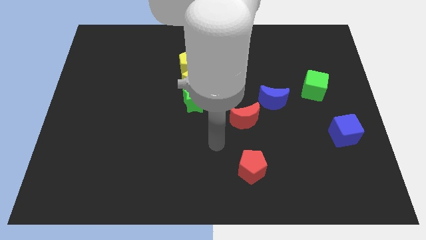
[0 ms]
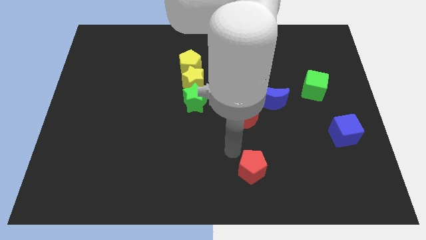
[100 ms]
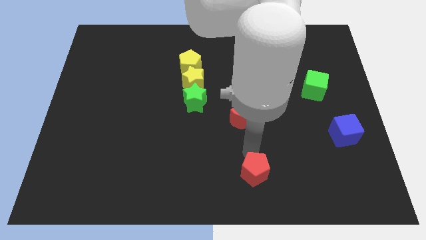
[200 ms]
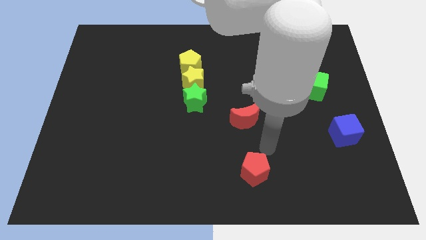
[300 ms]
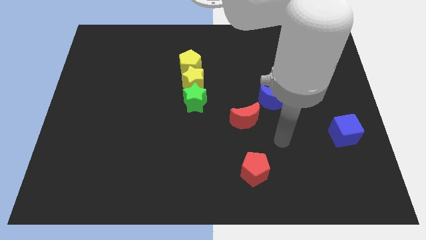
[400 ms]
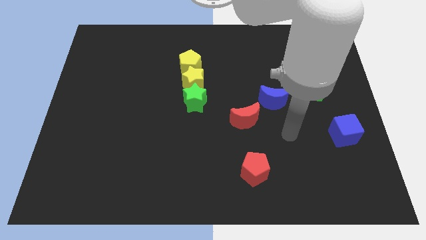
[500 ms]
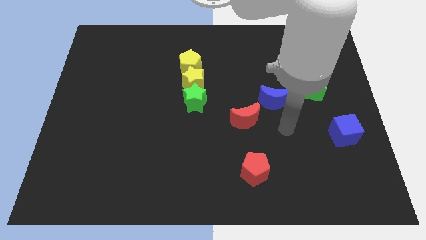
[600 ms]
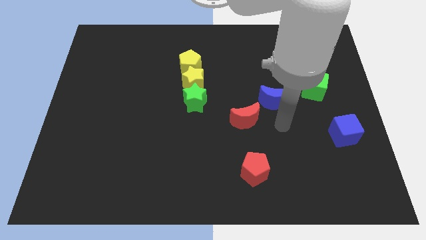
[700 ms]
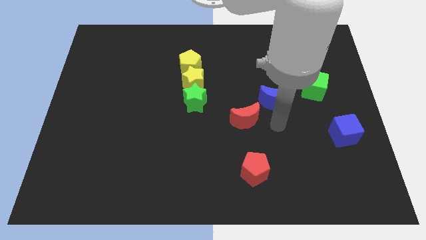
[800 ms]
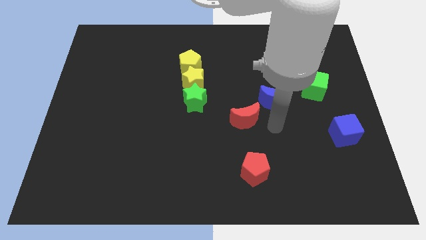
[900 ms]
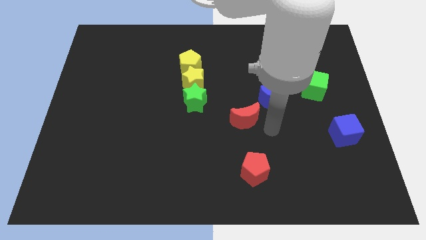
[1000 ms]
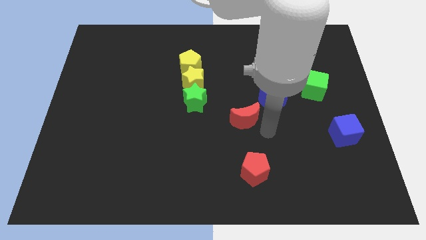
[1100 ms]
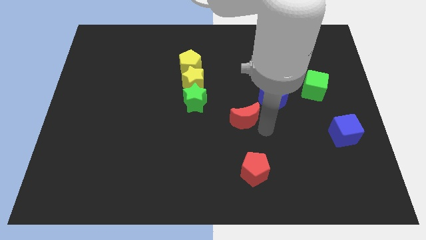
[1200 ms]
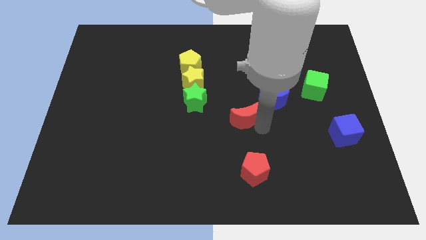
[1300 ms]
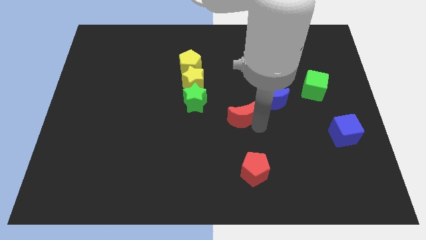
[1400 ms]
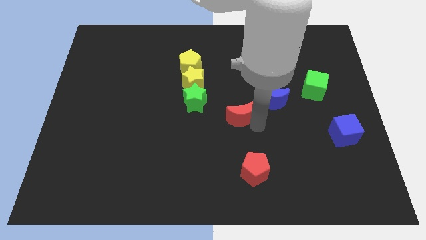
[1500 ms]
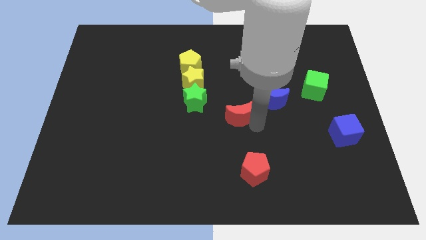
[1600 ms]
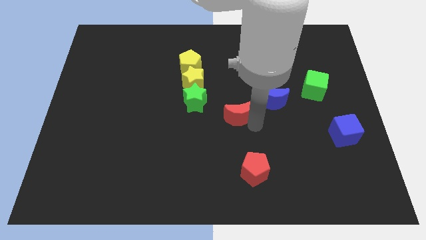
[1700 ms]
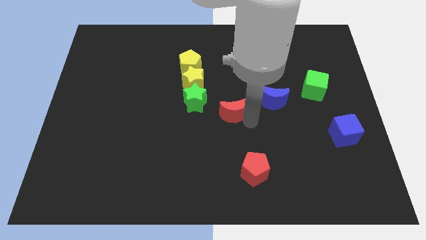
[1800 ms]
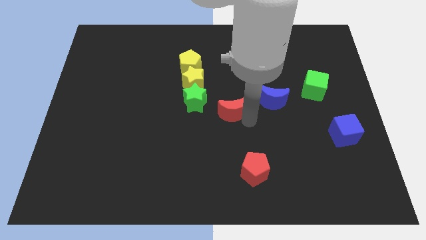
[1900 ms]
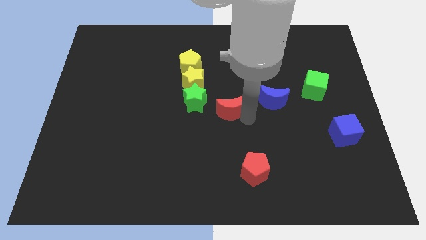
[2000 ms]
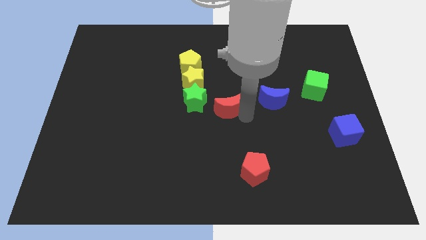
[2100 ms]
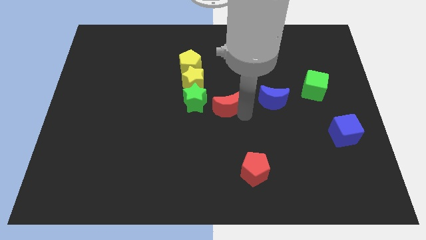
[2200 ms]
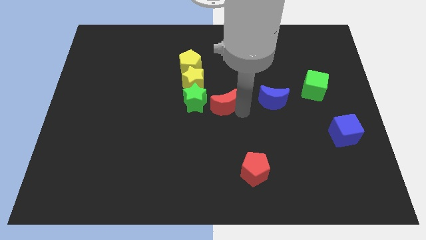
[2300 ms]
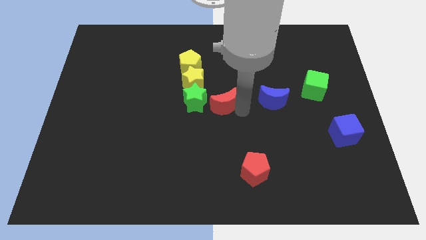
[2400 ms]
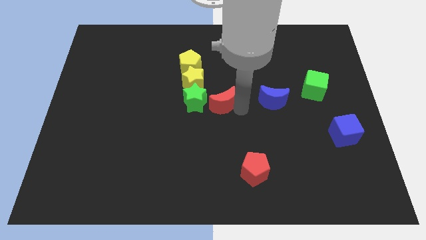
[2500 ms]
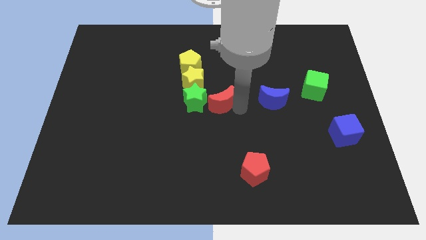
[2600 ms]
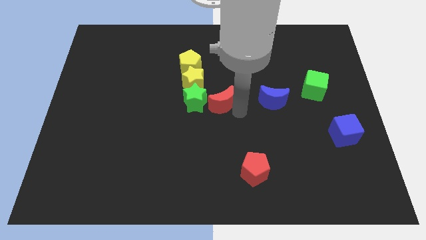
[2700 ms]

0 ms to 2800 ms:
push the red moon upwards

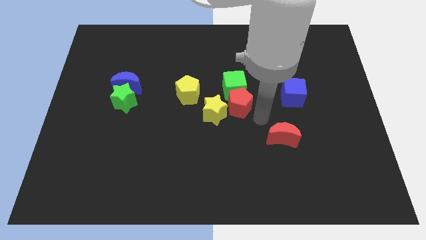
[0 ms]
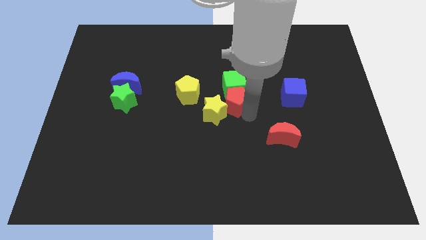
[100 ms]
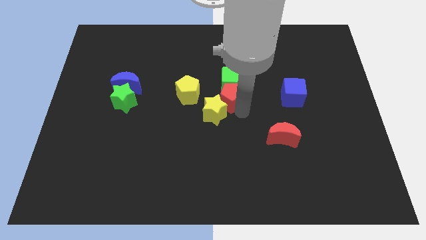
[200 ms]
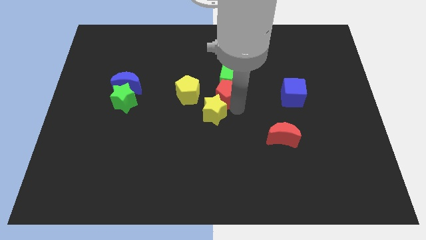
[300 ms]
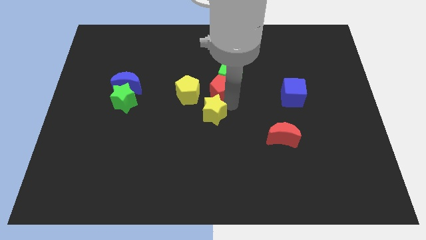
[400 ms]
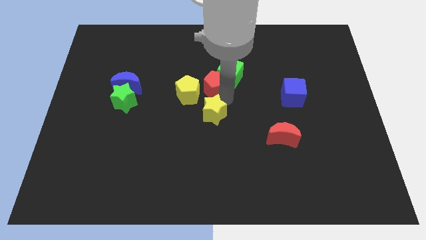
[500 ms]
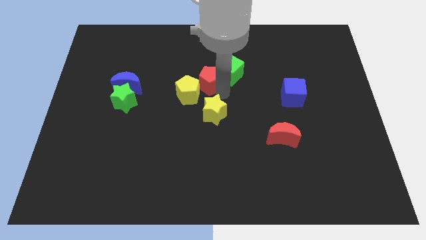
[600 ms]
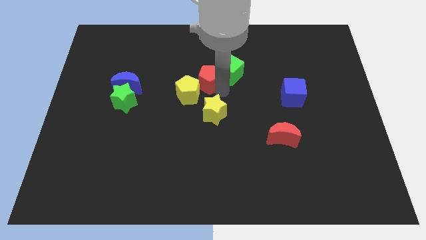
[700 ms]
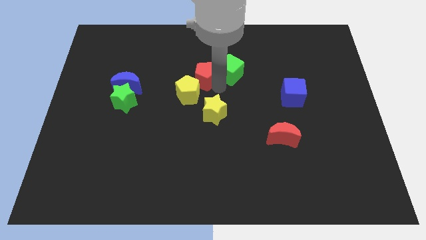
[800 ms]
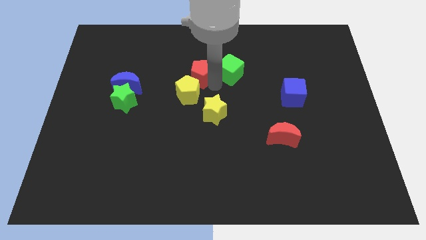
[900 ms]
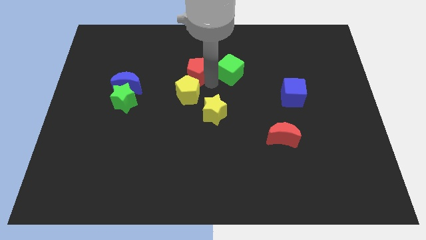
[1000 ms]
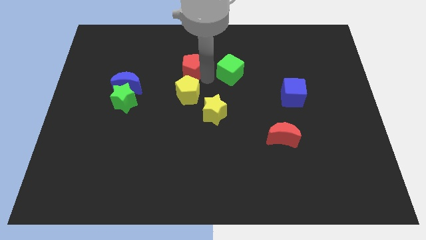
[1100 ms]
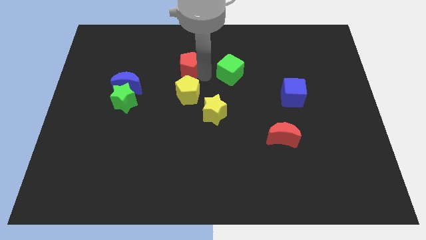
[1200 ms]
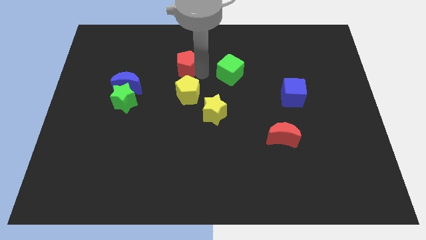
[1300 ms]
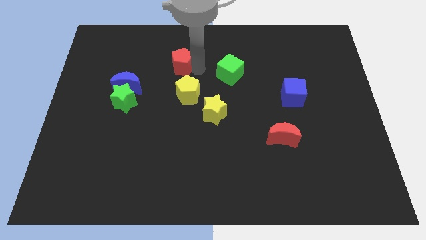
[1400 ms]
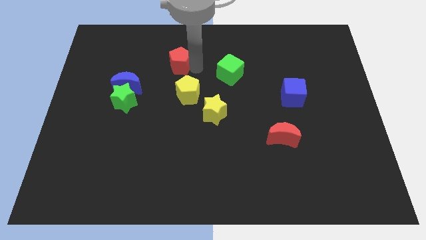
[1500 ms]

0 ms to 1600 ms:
push the red pentagon above yellow pentagon

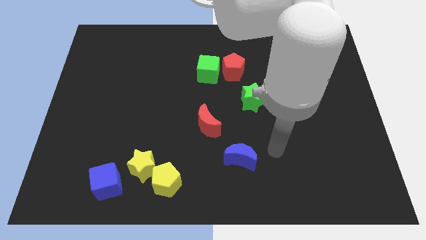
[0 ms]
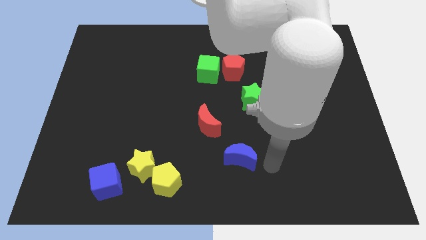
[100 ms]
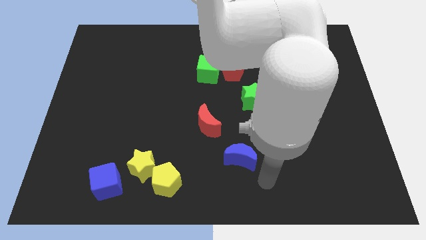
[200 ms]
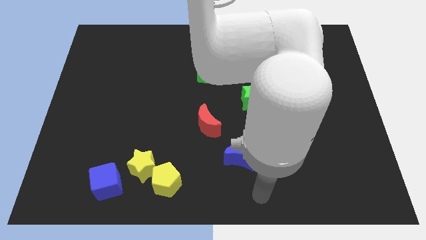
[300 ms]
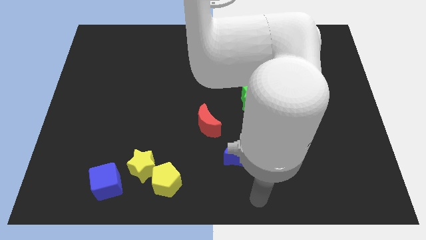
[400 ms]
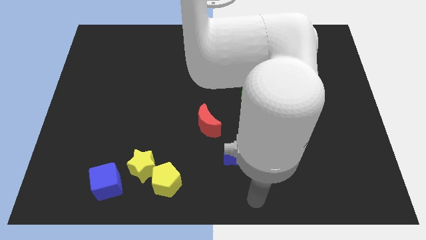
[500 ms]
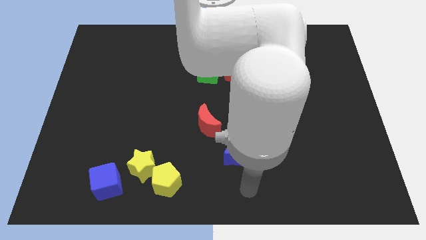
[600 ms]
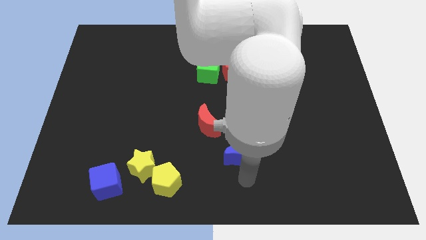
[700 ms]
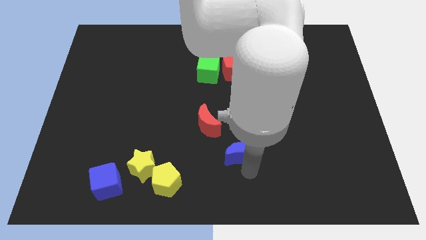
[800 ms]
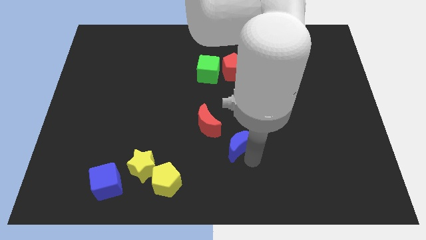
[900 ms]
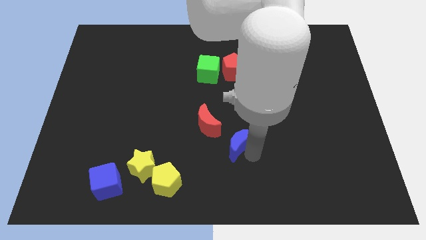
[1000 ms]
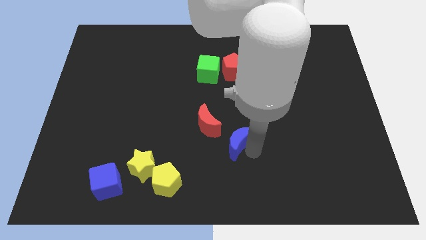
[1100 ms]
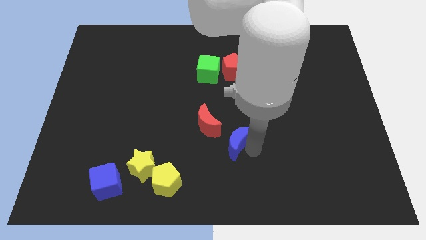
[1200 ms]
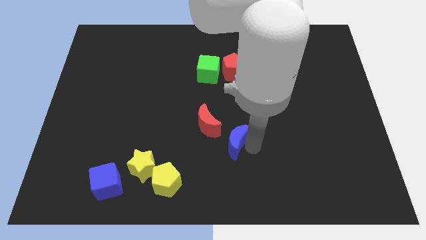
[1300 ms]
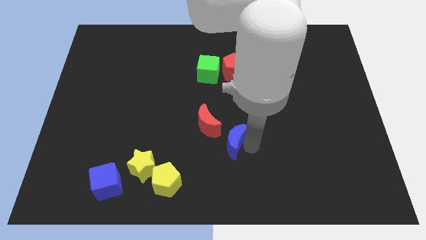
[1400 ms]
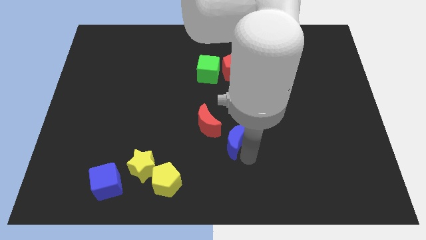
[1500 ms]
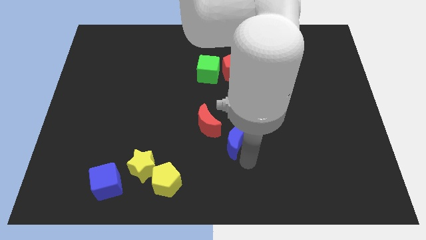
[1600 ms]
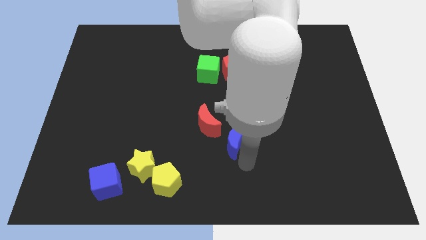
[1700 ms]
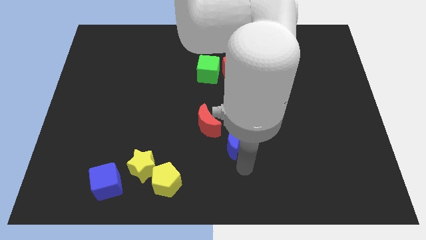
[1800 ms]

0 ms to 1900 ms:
push the blue moon towards green star

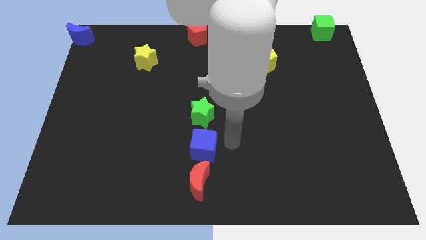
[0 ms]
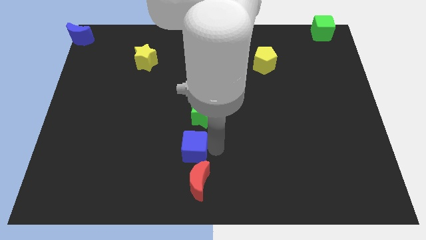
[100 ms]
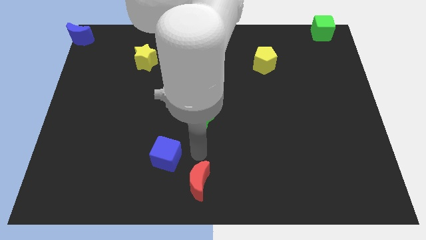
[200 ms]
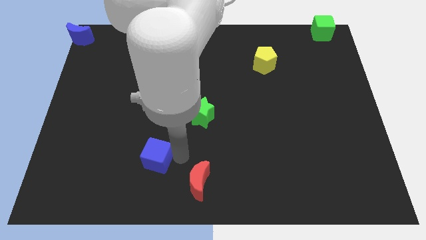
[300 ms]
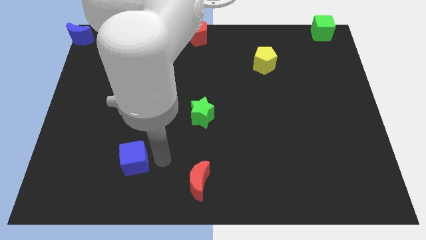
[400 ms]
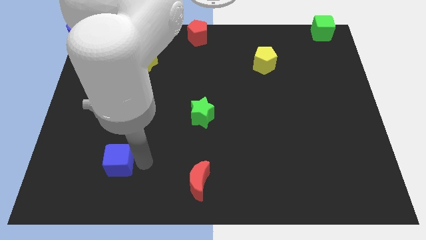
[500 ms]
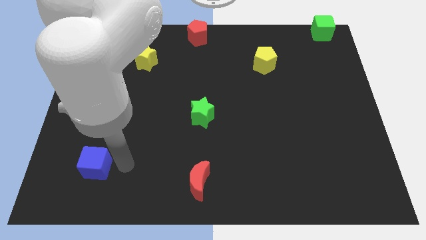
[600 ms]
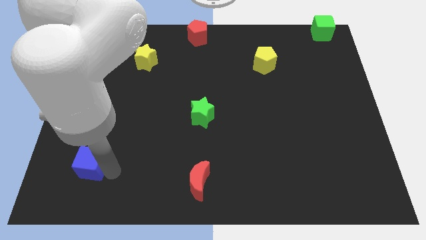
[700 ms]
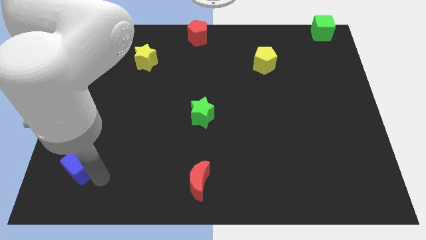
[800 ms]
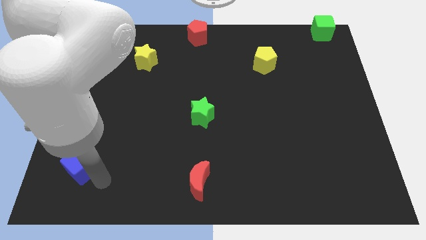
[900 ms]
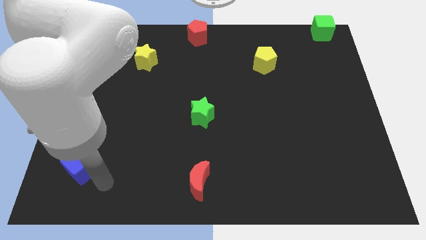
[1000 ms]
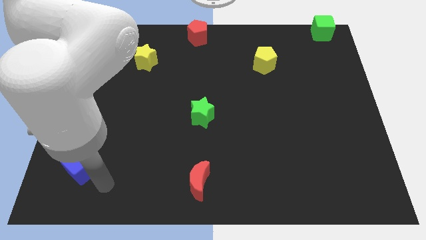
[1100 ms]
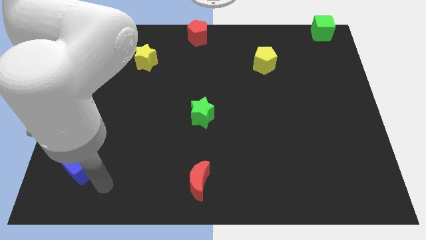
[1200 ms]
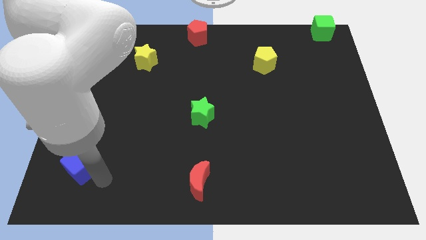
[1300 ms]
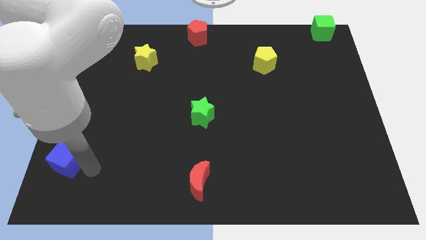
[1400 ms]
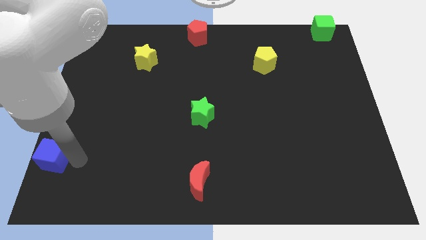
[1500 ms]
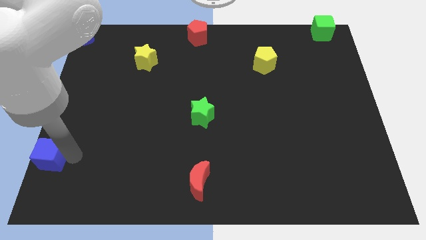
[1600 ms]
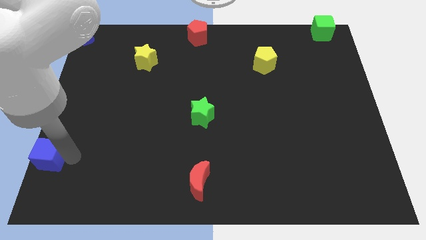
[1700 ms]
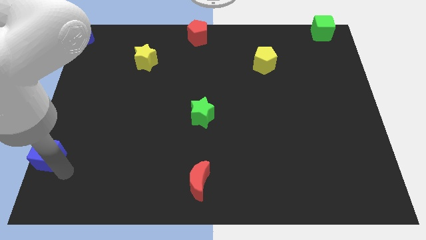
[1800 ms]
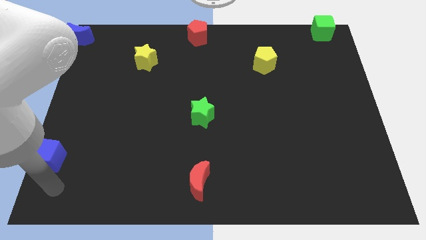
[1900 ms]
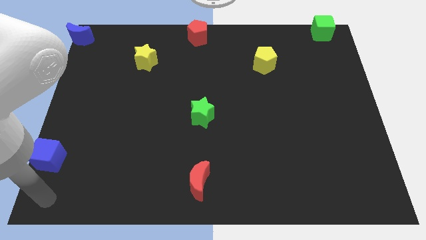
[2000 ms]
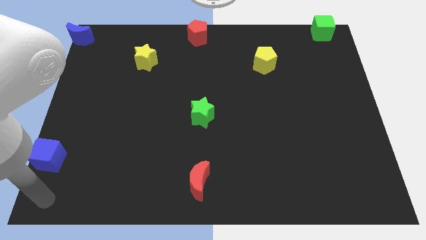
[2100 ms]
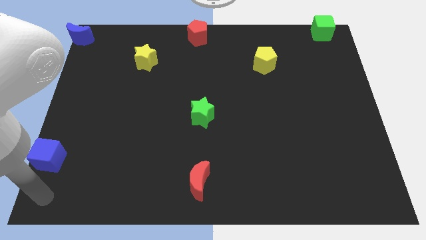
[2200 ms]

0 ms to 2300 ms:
push the blue cube towards left

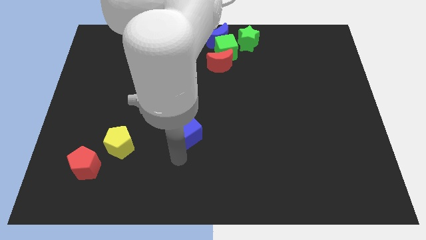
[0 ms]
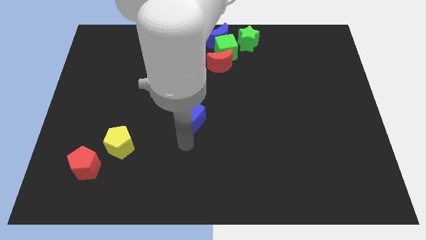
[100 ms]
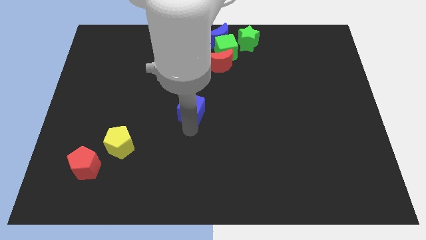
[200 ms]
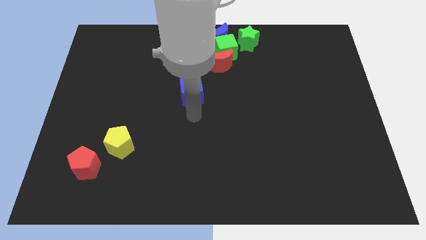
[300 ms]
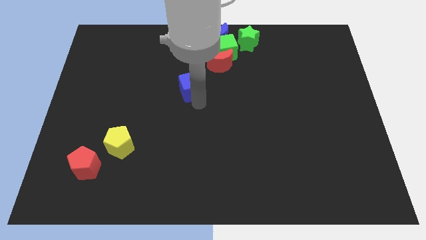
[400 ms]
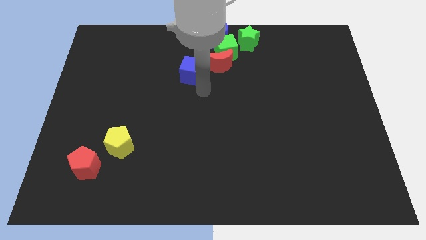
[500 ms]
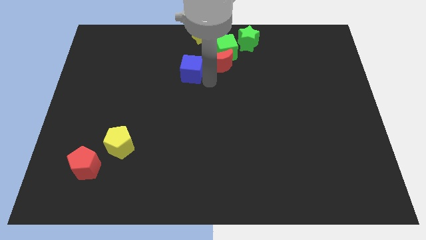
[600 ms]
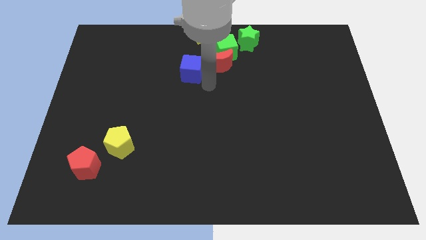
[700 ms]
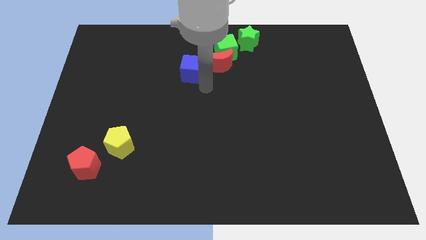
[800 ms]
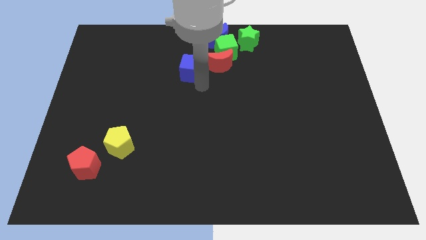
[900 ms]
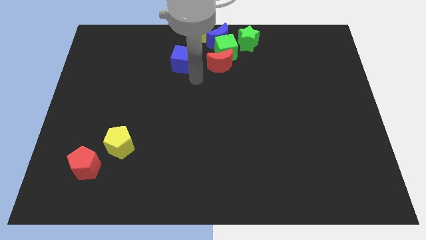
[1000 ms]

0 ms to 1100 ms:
place the blue cube left to the red moon
